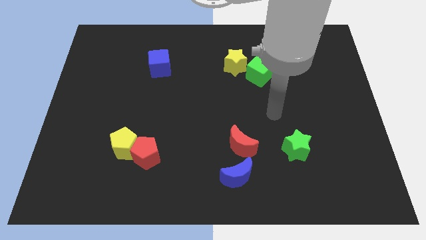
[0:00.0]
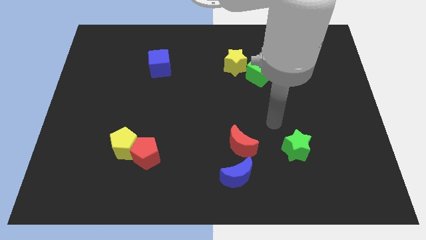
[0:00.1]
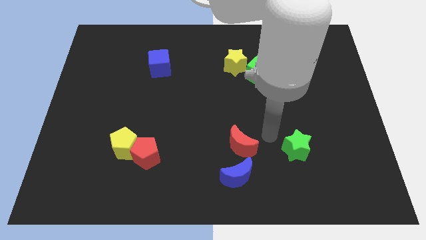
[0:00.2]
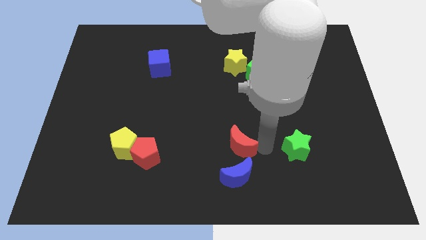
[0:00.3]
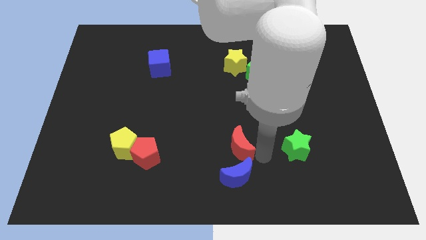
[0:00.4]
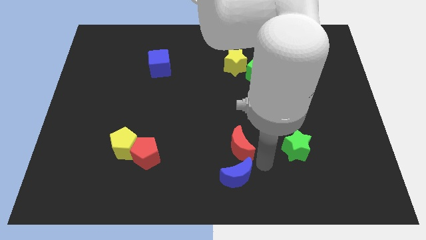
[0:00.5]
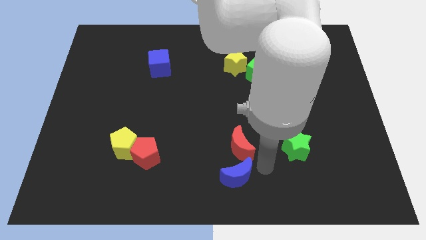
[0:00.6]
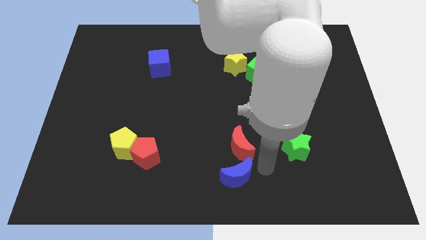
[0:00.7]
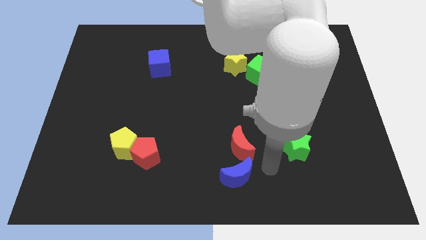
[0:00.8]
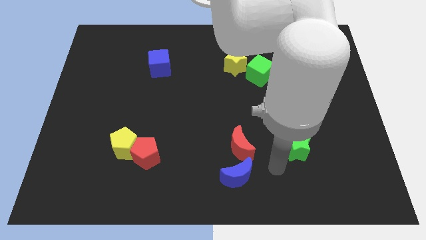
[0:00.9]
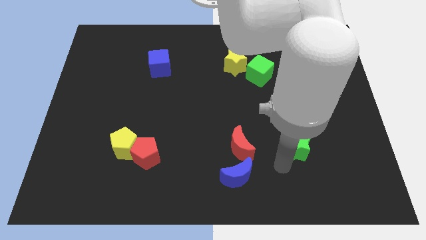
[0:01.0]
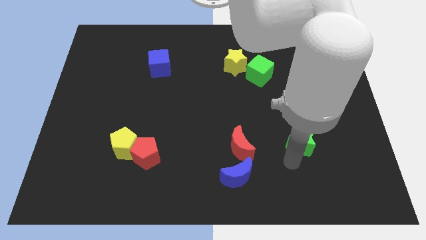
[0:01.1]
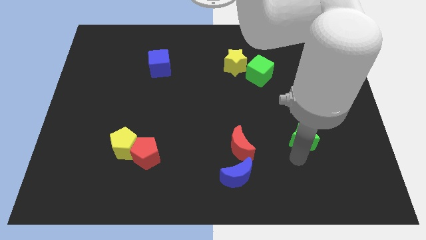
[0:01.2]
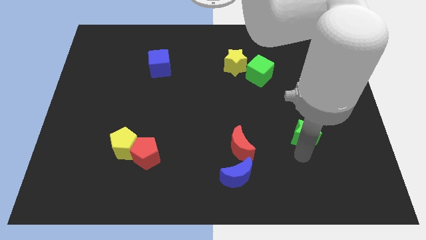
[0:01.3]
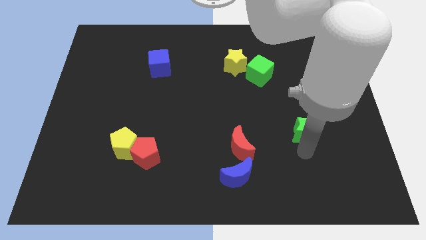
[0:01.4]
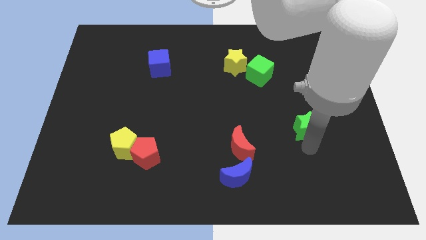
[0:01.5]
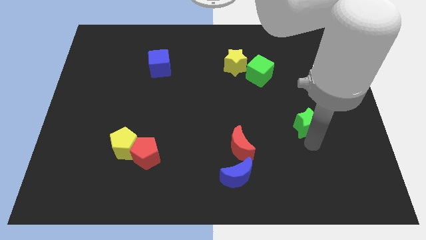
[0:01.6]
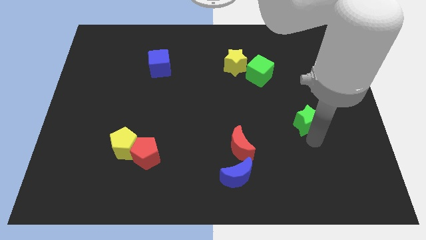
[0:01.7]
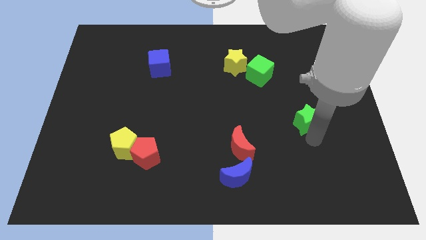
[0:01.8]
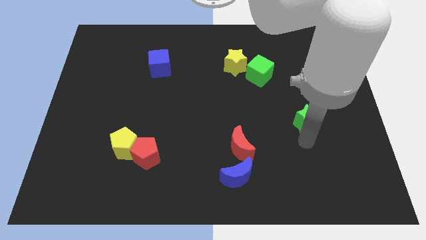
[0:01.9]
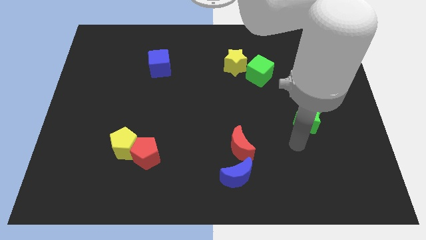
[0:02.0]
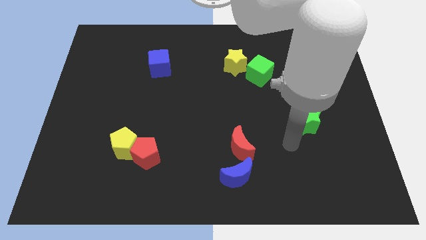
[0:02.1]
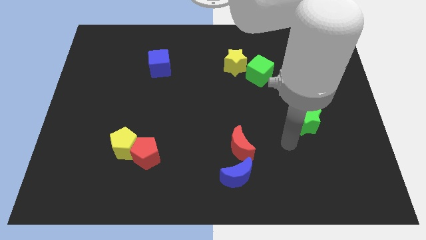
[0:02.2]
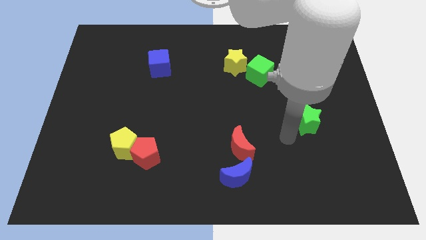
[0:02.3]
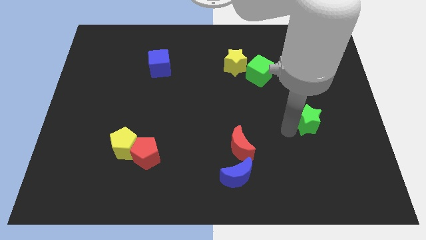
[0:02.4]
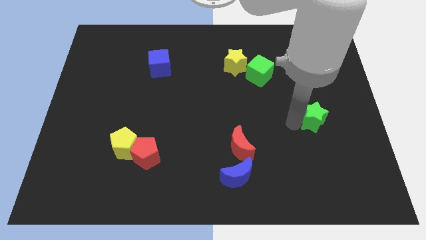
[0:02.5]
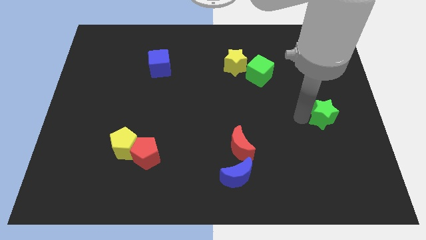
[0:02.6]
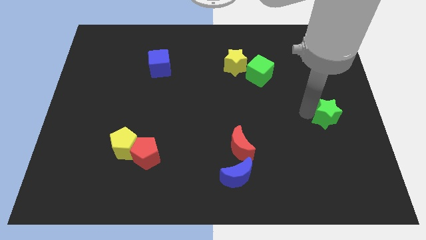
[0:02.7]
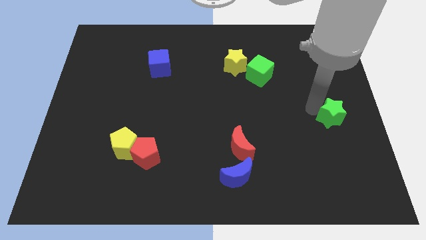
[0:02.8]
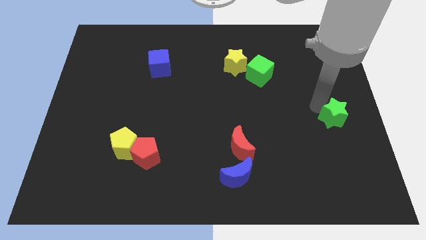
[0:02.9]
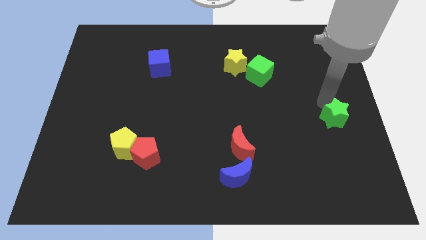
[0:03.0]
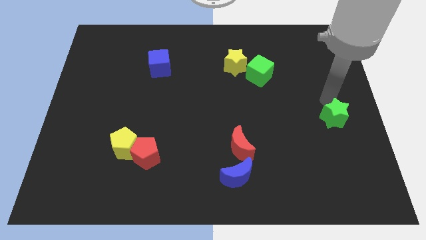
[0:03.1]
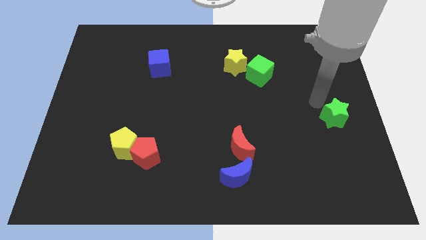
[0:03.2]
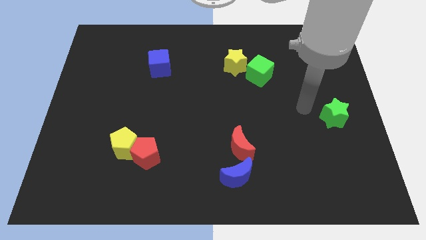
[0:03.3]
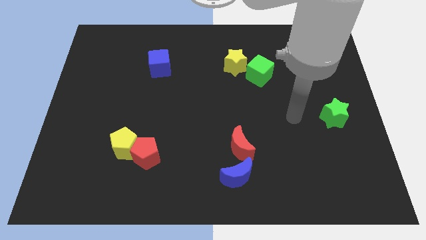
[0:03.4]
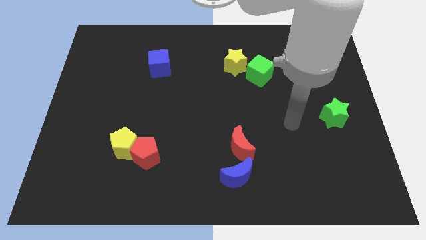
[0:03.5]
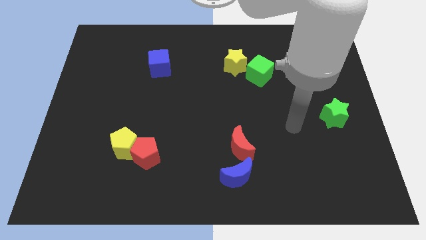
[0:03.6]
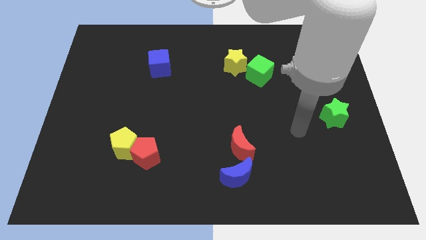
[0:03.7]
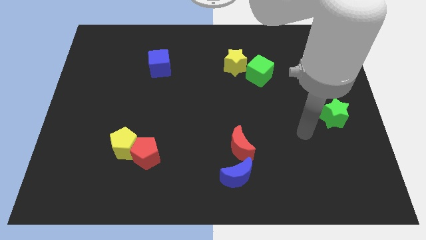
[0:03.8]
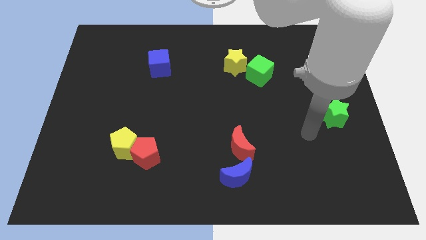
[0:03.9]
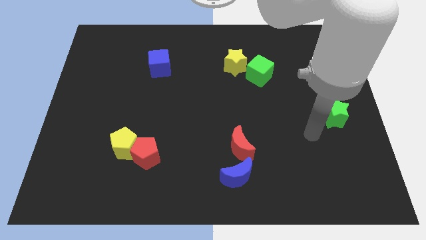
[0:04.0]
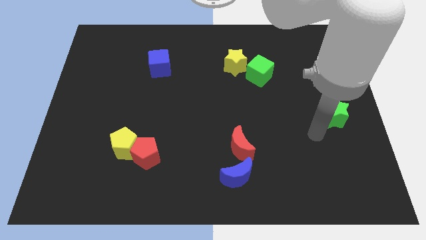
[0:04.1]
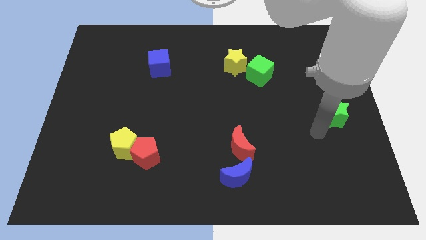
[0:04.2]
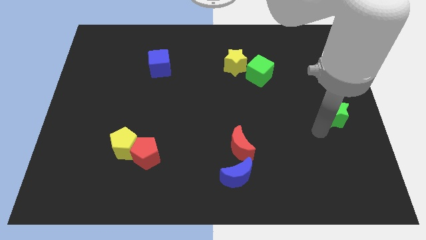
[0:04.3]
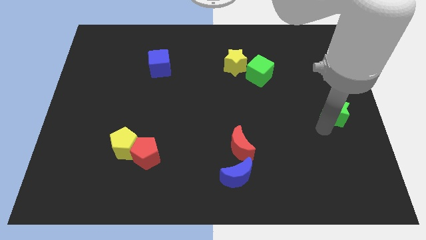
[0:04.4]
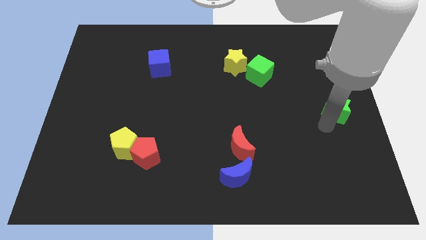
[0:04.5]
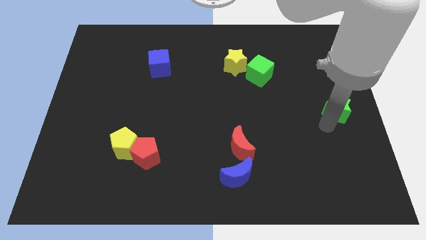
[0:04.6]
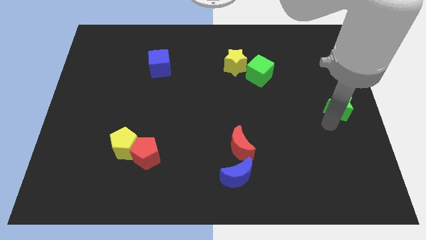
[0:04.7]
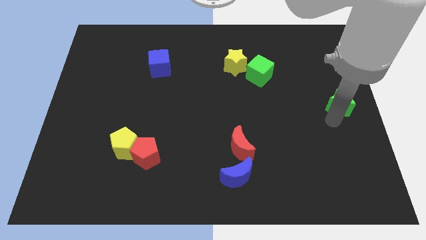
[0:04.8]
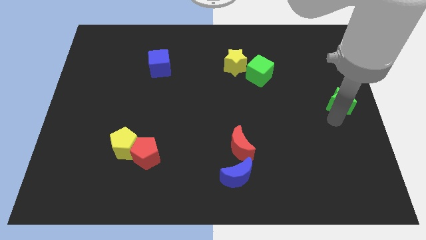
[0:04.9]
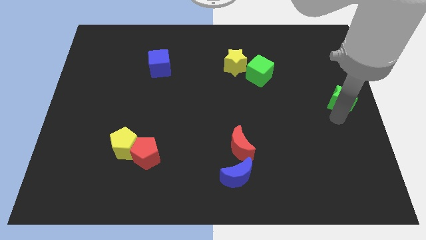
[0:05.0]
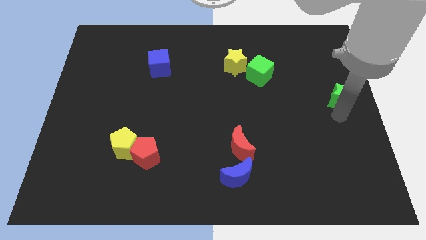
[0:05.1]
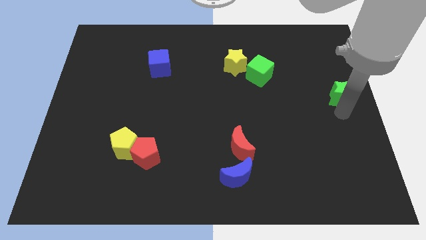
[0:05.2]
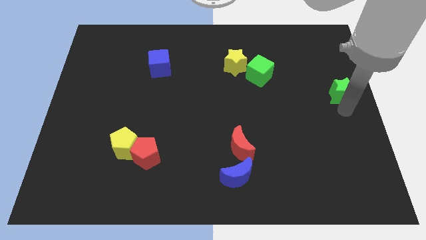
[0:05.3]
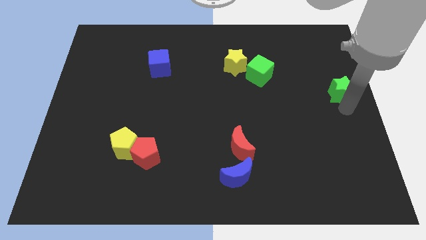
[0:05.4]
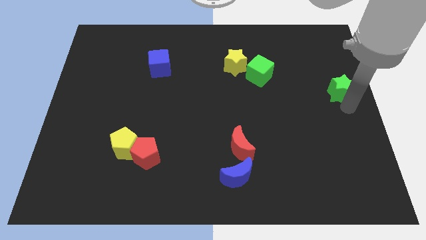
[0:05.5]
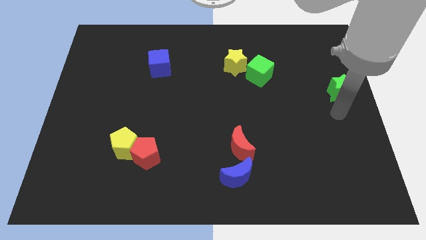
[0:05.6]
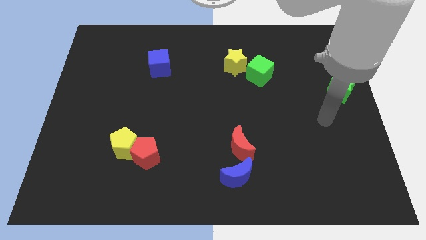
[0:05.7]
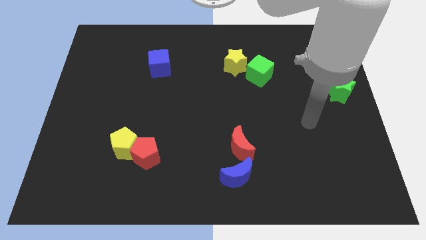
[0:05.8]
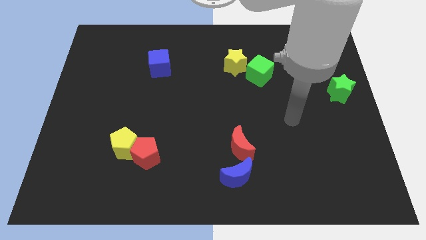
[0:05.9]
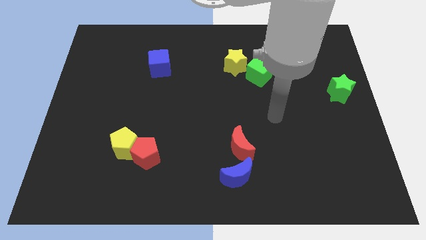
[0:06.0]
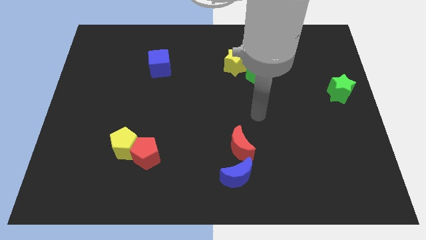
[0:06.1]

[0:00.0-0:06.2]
place the green star at the center right side of the board

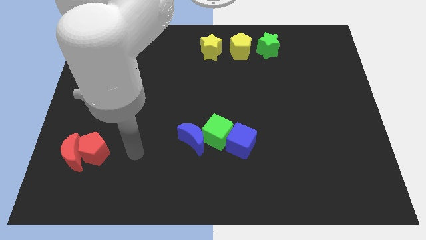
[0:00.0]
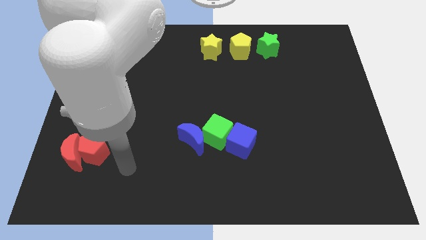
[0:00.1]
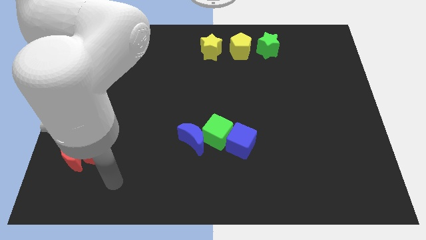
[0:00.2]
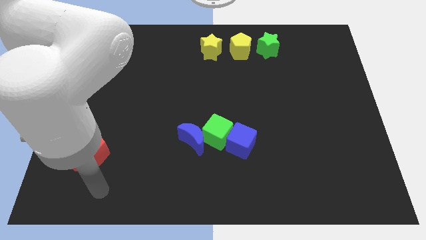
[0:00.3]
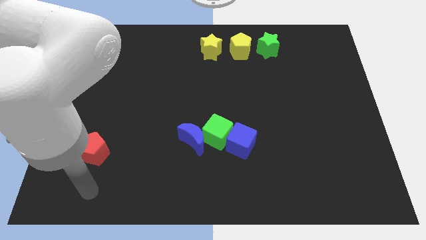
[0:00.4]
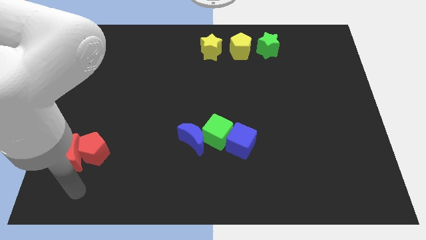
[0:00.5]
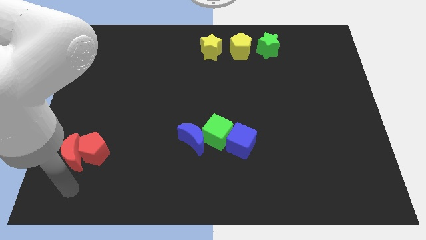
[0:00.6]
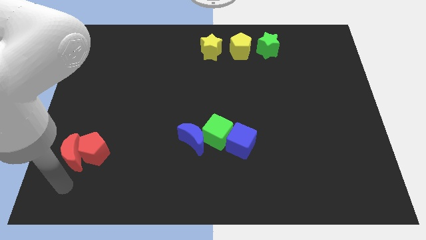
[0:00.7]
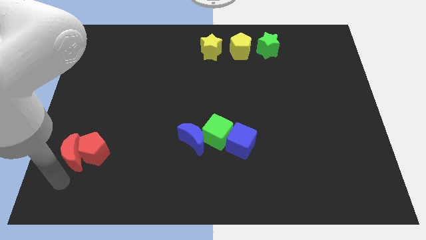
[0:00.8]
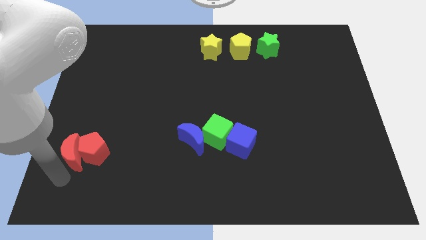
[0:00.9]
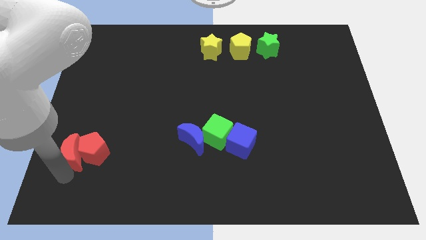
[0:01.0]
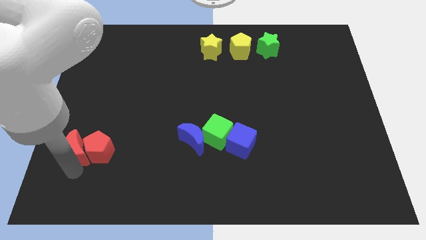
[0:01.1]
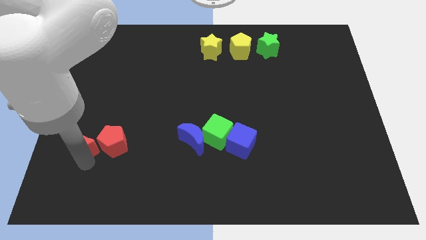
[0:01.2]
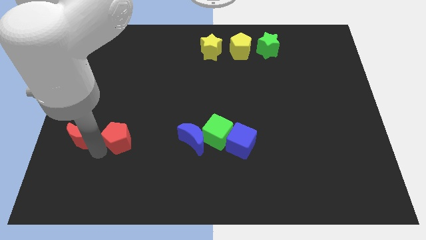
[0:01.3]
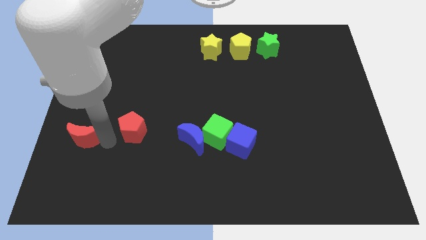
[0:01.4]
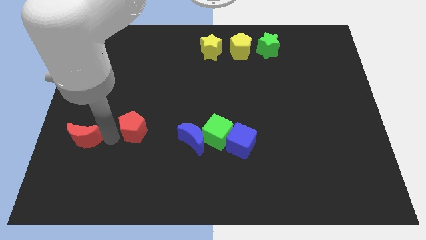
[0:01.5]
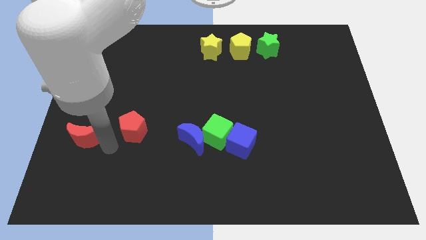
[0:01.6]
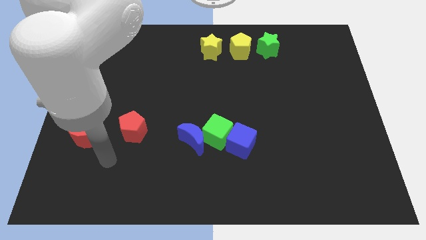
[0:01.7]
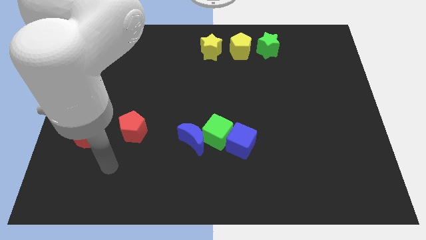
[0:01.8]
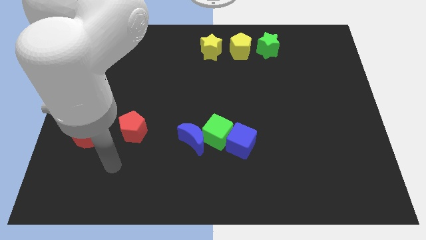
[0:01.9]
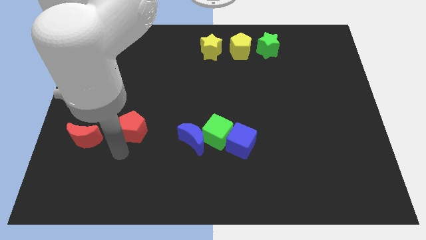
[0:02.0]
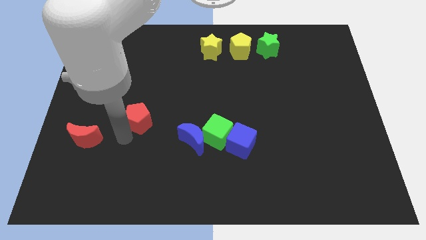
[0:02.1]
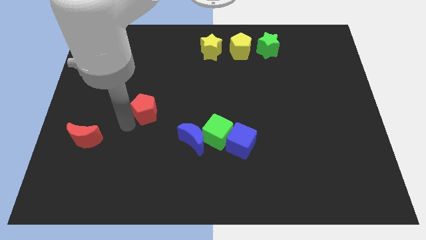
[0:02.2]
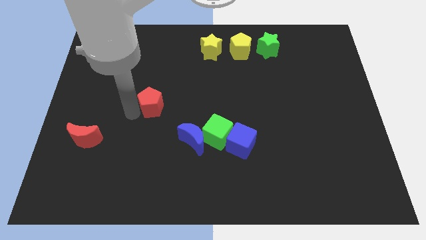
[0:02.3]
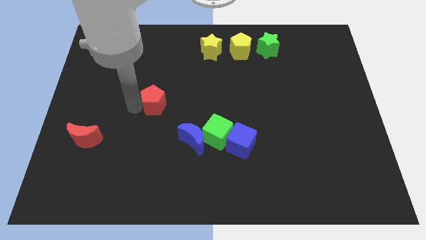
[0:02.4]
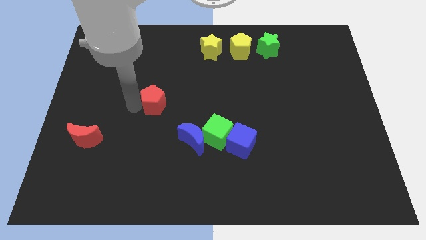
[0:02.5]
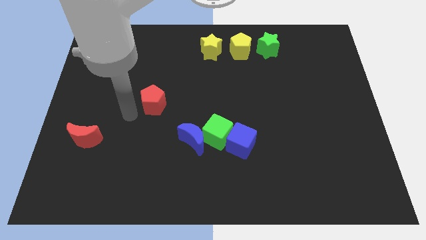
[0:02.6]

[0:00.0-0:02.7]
push the red pentagon towards the yellow star
